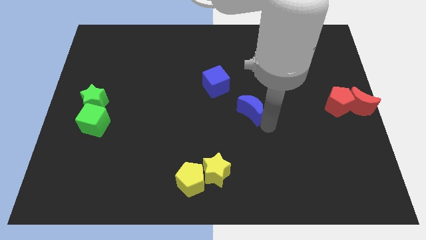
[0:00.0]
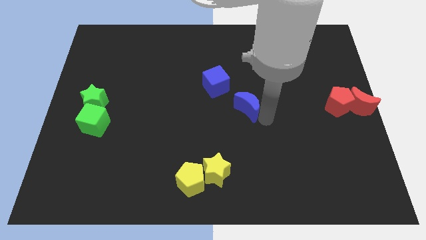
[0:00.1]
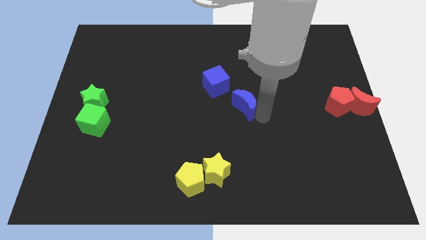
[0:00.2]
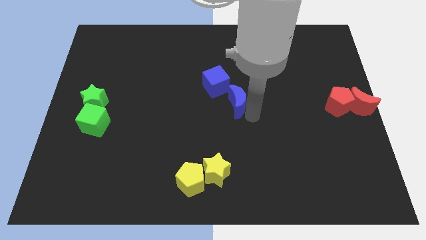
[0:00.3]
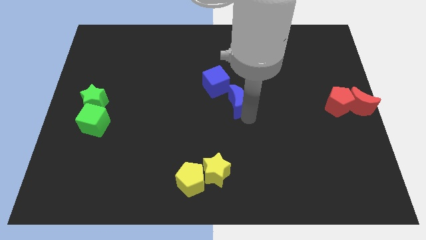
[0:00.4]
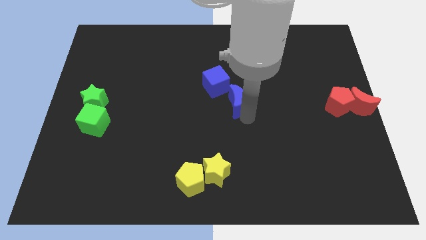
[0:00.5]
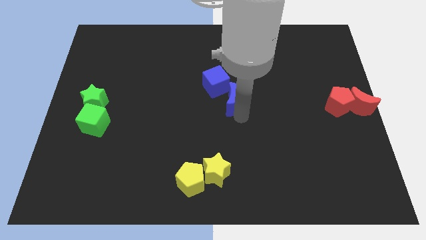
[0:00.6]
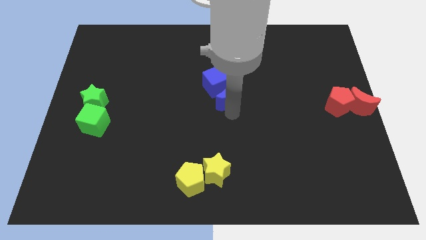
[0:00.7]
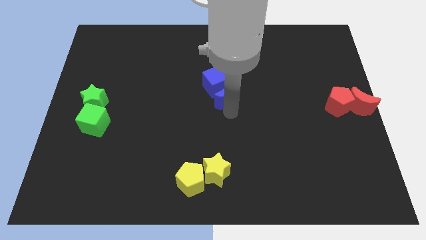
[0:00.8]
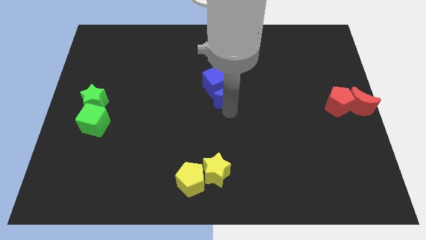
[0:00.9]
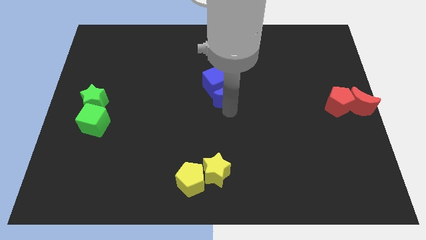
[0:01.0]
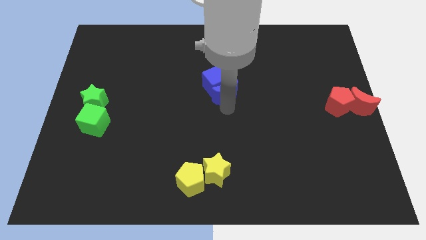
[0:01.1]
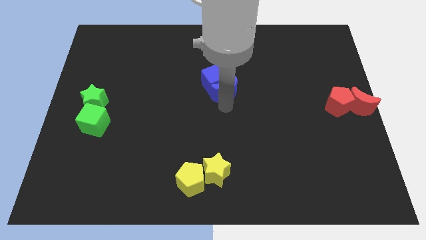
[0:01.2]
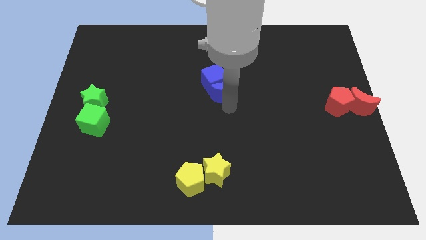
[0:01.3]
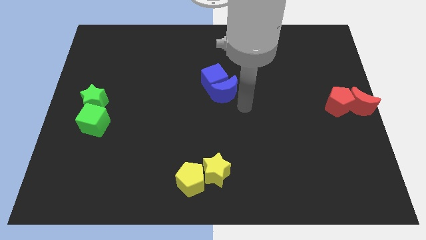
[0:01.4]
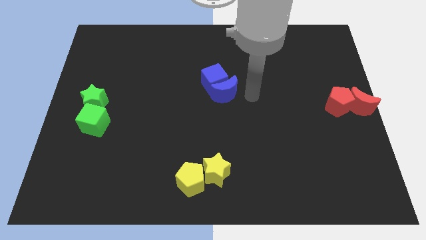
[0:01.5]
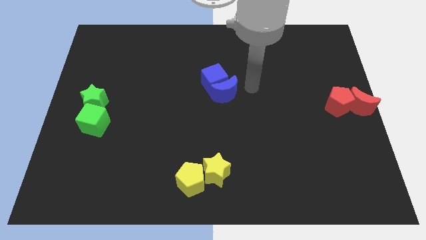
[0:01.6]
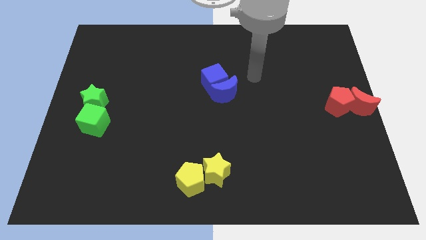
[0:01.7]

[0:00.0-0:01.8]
push the blue crescent into the blue cube

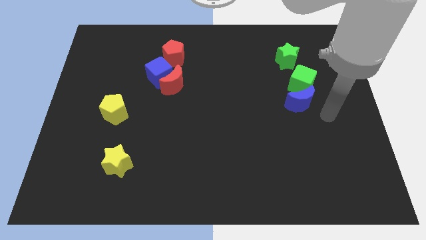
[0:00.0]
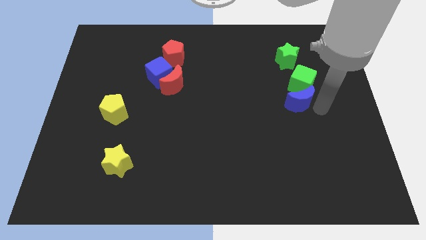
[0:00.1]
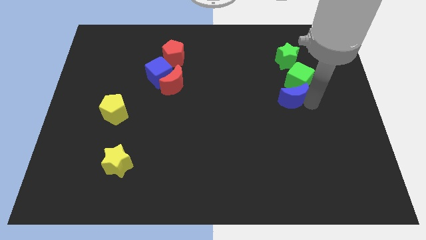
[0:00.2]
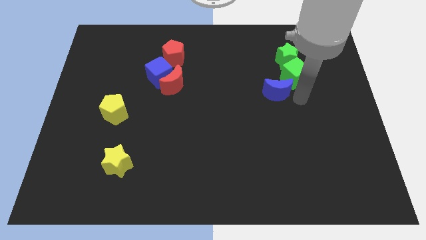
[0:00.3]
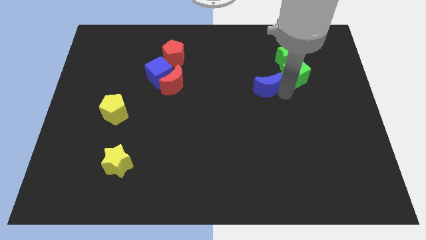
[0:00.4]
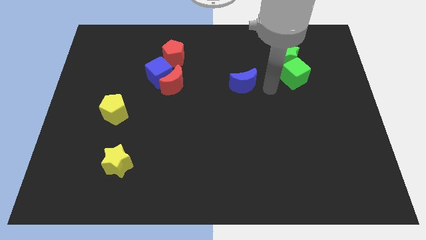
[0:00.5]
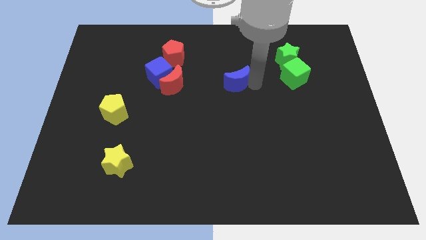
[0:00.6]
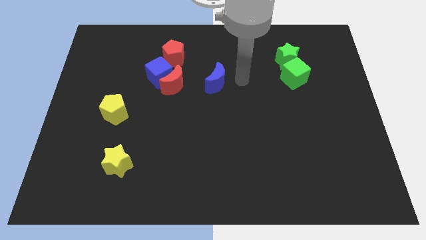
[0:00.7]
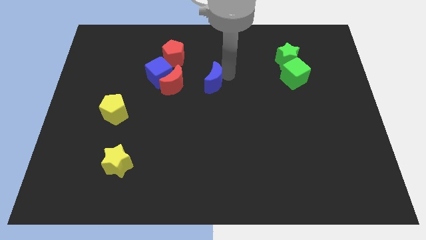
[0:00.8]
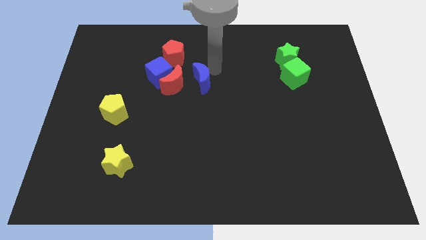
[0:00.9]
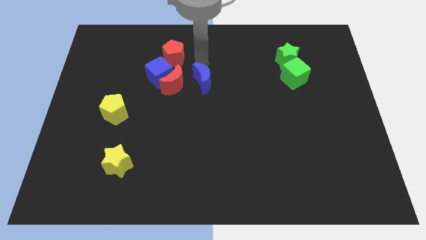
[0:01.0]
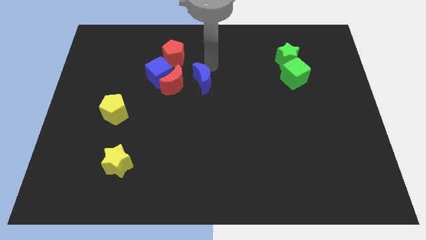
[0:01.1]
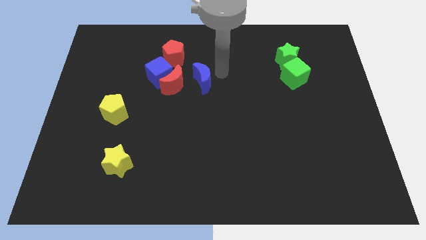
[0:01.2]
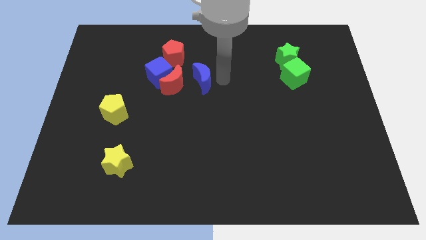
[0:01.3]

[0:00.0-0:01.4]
push the blue moon close to the red moon

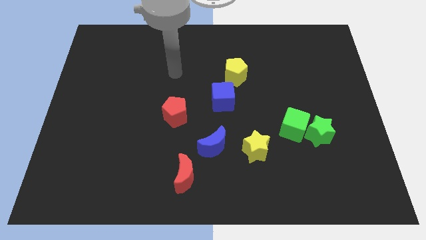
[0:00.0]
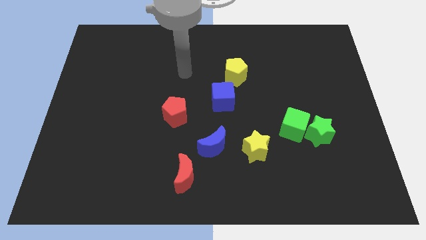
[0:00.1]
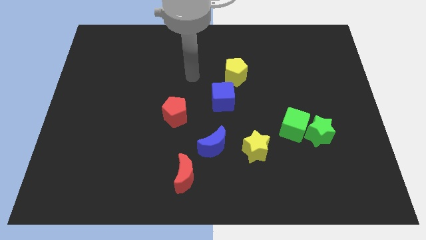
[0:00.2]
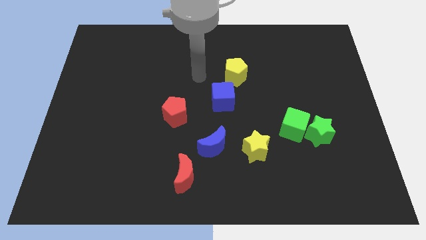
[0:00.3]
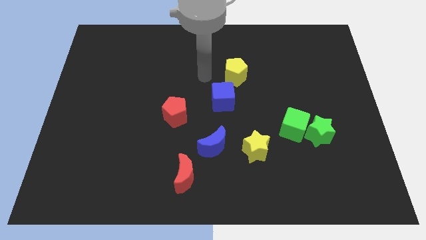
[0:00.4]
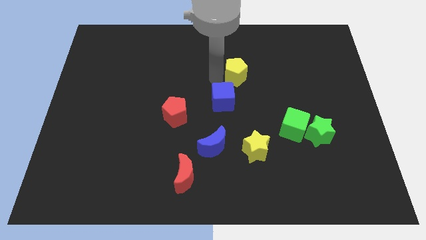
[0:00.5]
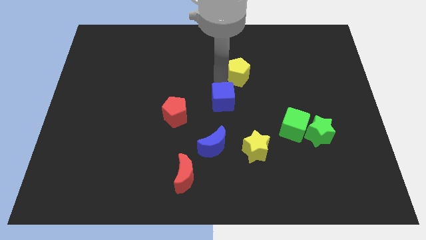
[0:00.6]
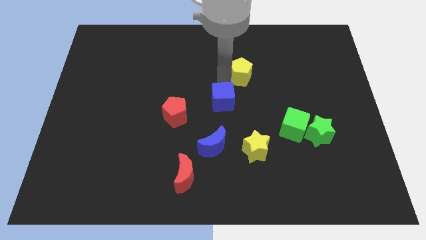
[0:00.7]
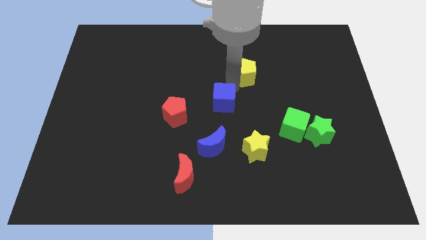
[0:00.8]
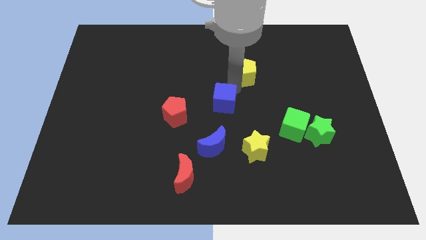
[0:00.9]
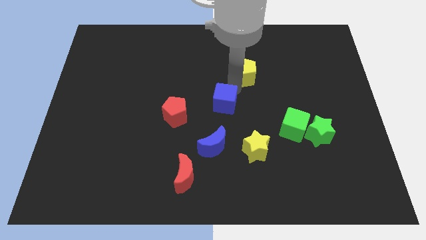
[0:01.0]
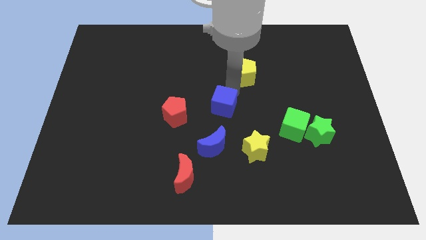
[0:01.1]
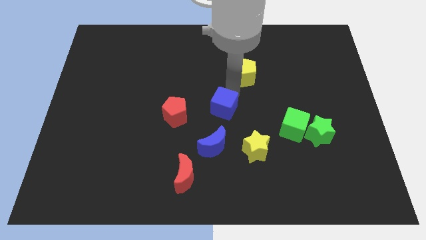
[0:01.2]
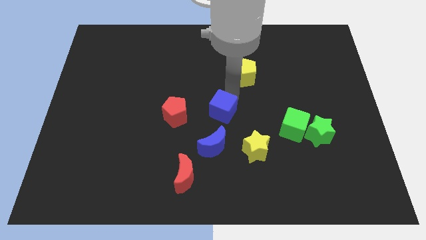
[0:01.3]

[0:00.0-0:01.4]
push the blue cube away from the yellow pentagon

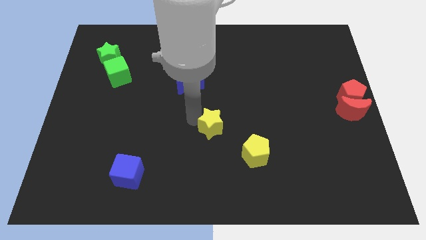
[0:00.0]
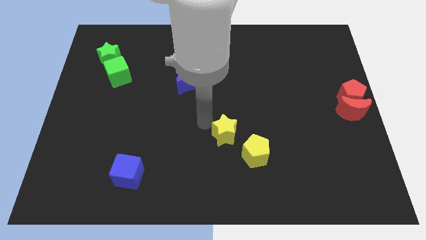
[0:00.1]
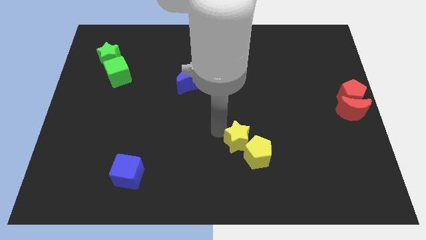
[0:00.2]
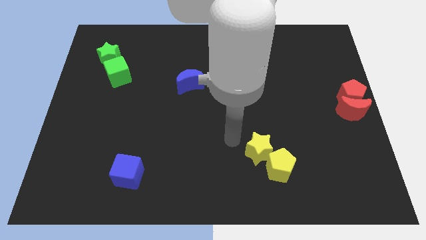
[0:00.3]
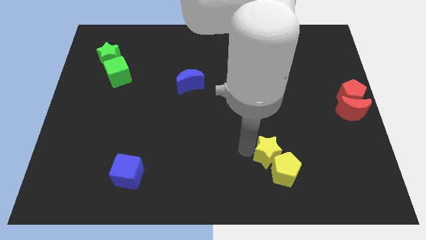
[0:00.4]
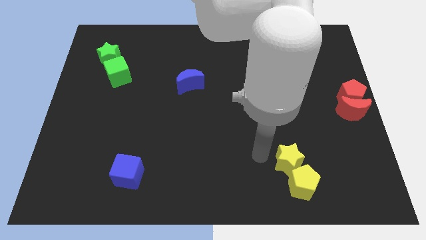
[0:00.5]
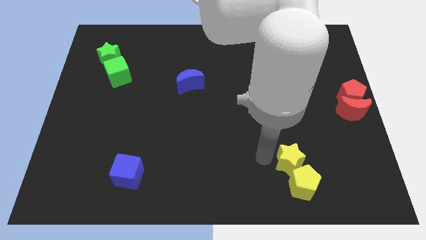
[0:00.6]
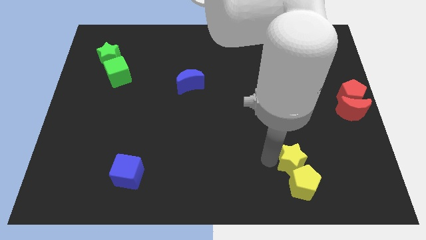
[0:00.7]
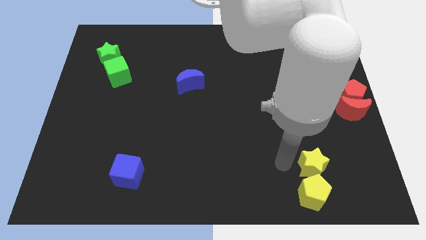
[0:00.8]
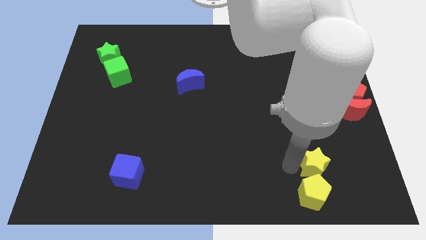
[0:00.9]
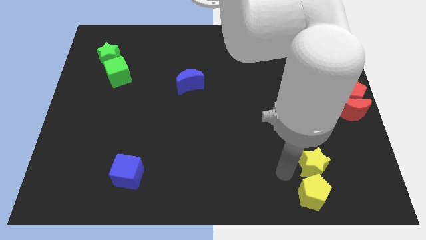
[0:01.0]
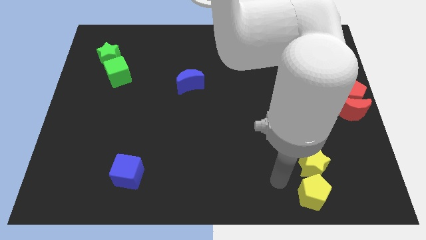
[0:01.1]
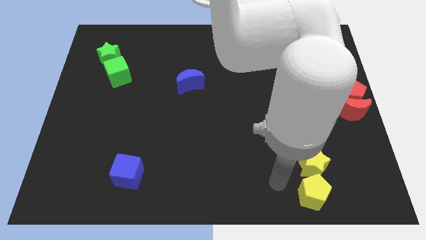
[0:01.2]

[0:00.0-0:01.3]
push the yellow pentagon with the yellow star towards the bottom right of the board

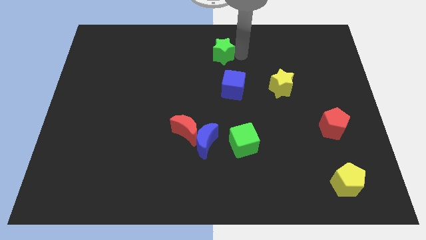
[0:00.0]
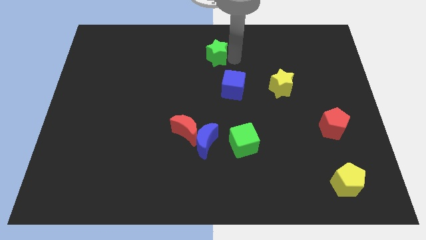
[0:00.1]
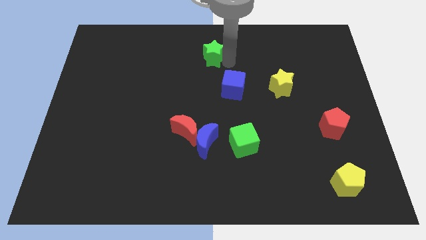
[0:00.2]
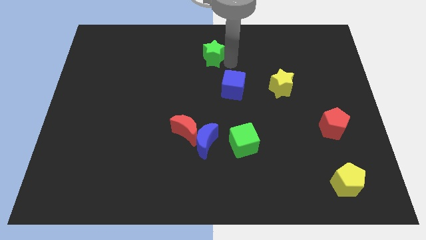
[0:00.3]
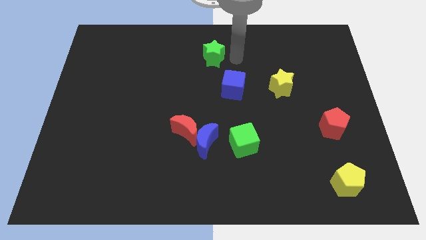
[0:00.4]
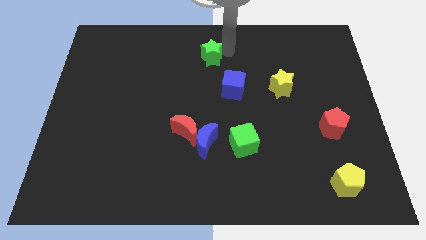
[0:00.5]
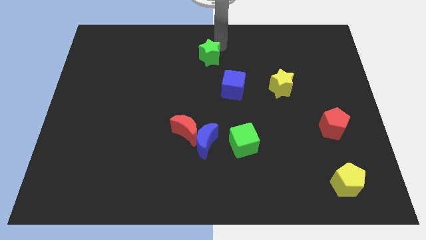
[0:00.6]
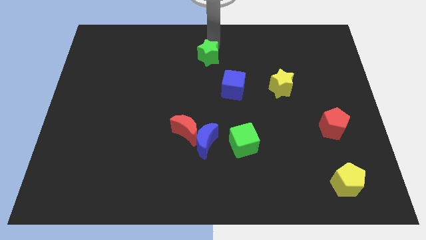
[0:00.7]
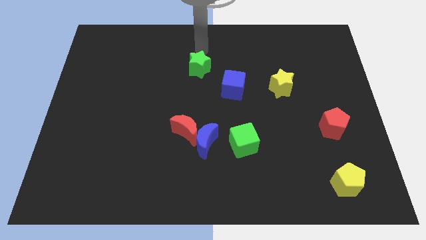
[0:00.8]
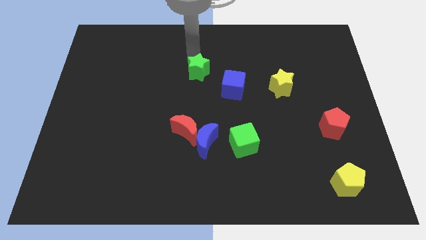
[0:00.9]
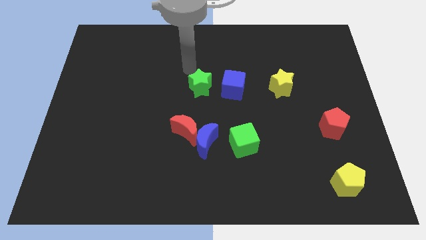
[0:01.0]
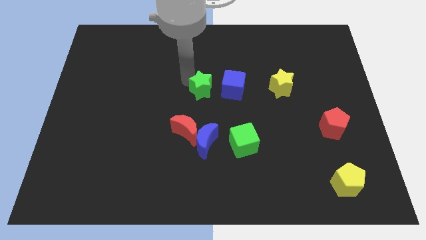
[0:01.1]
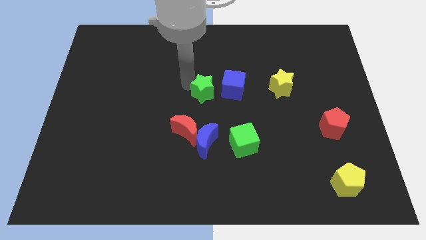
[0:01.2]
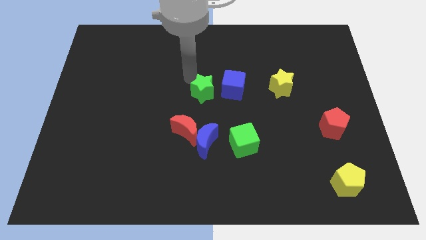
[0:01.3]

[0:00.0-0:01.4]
move the green star left to blue cube to the center of the board

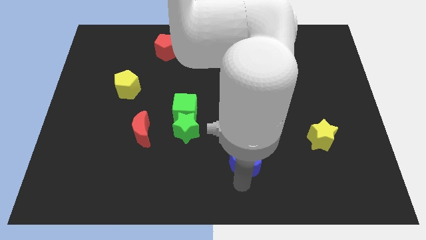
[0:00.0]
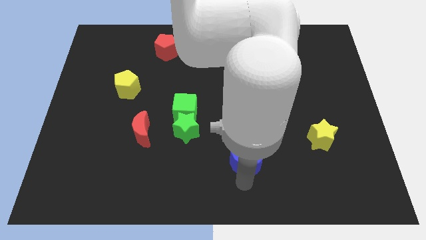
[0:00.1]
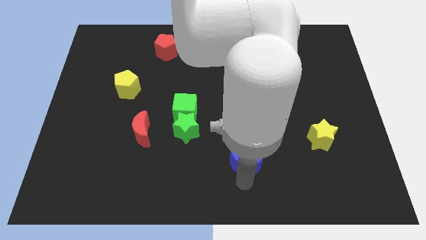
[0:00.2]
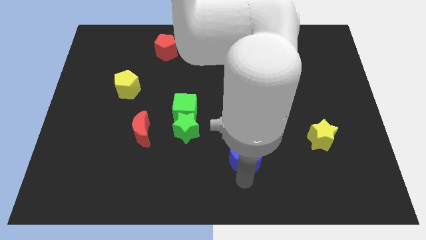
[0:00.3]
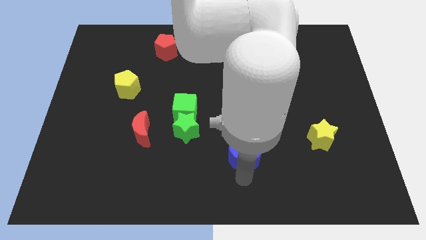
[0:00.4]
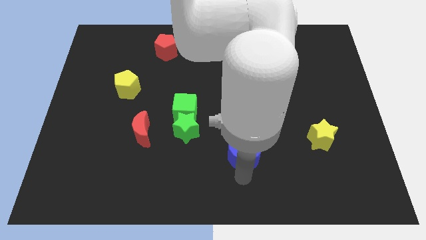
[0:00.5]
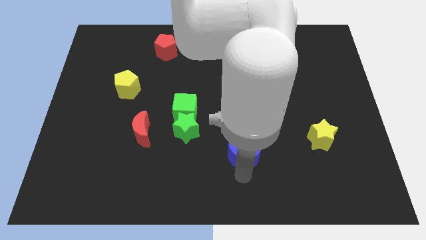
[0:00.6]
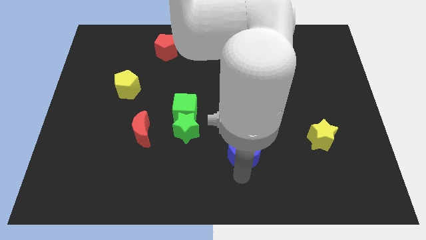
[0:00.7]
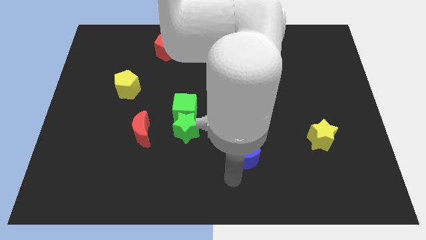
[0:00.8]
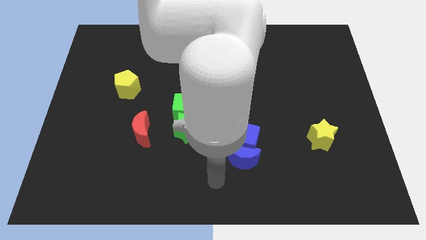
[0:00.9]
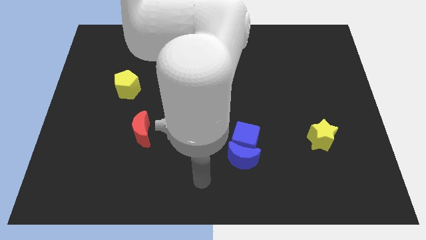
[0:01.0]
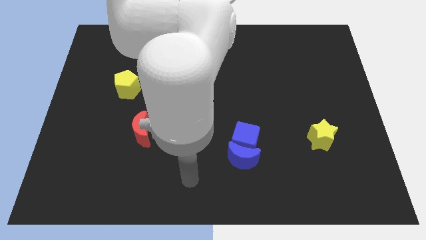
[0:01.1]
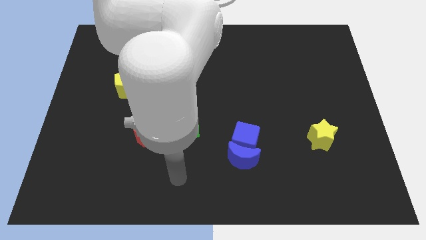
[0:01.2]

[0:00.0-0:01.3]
slightly push the blue crescent into the blue cube

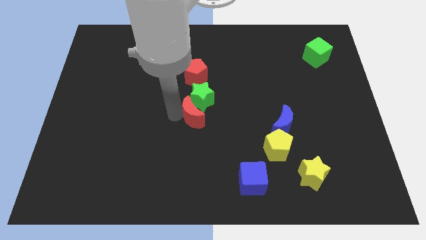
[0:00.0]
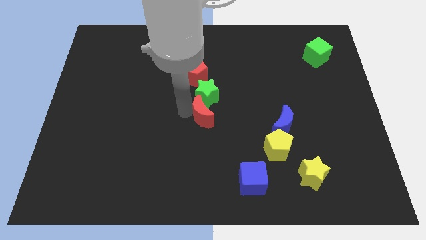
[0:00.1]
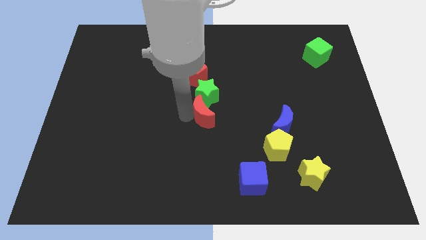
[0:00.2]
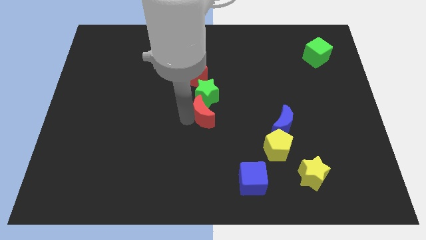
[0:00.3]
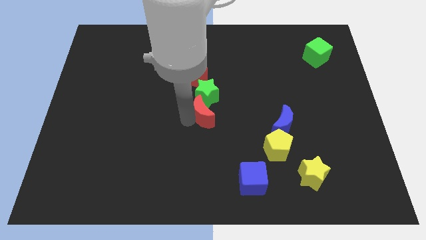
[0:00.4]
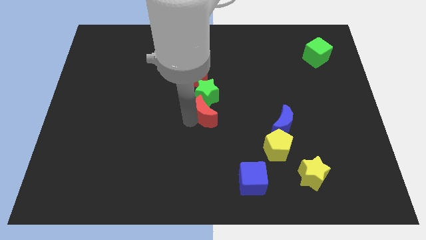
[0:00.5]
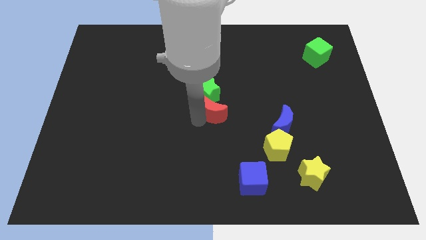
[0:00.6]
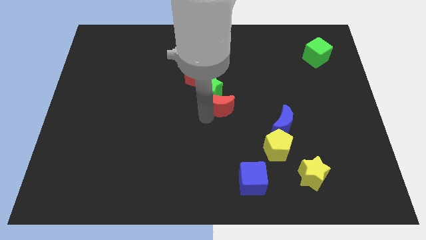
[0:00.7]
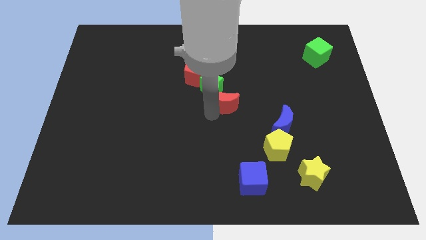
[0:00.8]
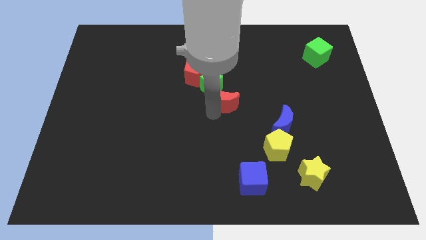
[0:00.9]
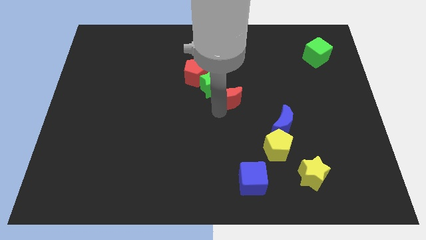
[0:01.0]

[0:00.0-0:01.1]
push the red crescent along with the green star slightly upwards
